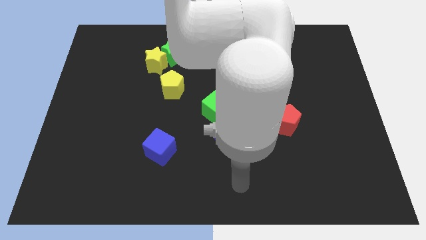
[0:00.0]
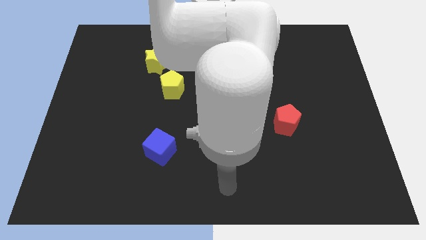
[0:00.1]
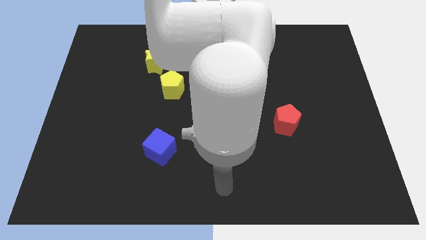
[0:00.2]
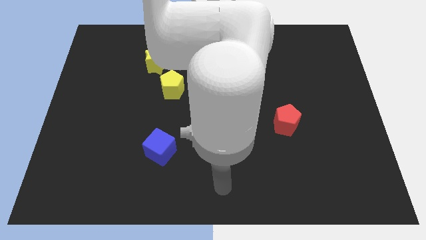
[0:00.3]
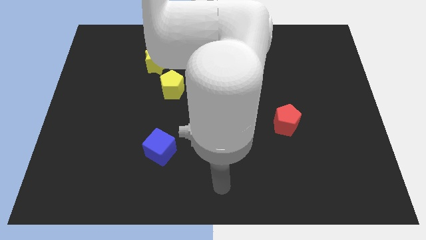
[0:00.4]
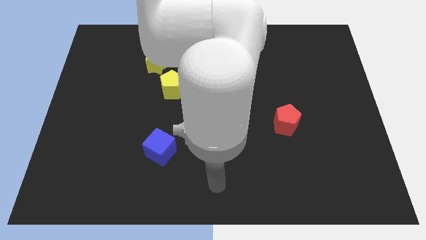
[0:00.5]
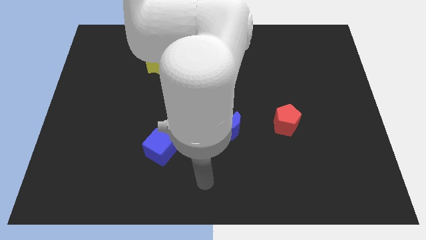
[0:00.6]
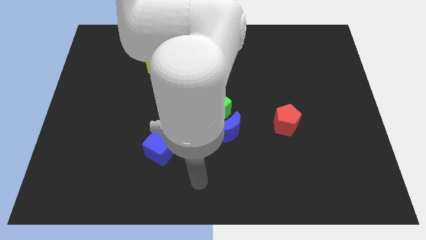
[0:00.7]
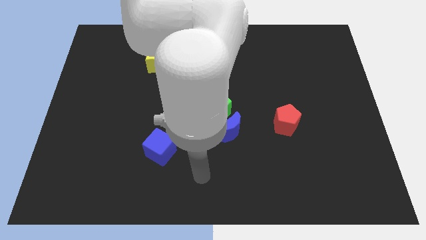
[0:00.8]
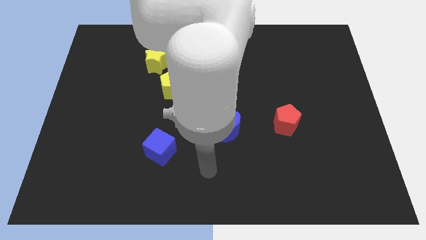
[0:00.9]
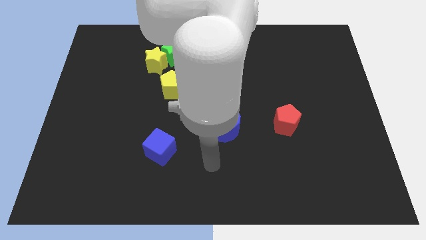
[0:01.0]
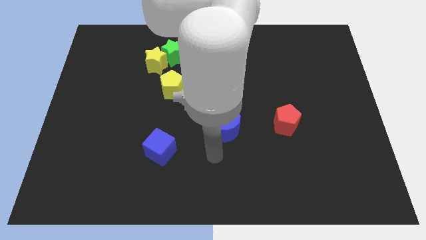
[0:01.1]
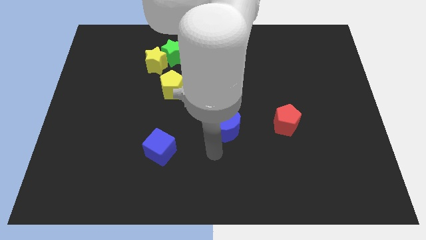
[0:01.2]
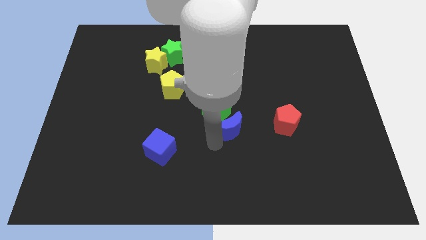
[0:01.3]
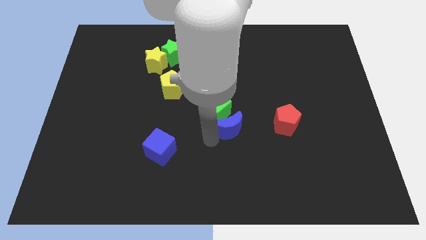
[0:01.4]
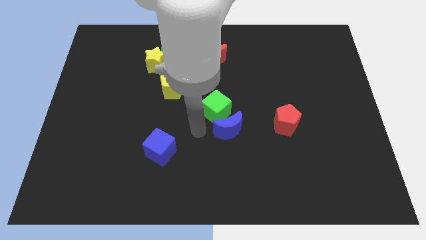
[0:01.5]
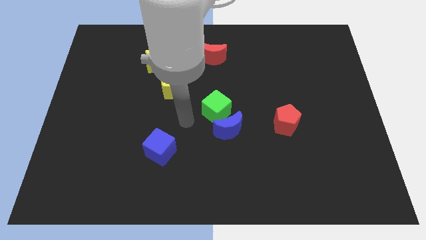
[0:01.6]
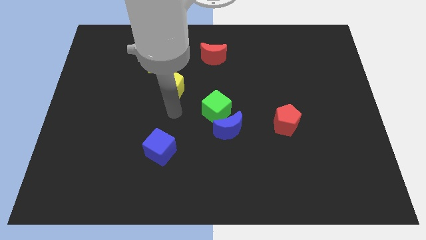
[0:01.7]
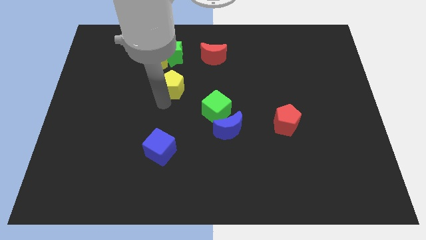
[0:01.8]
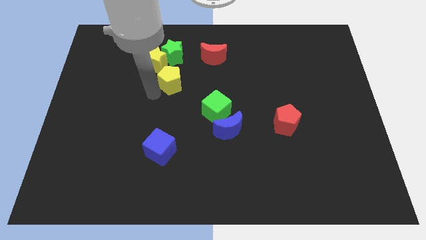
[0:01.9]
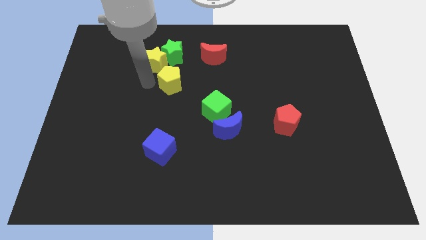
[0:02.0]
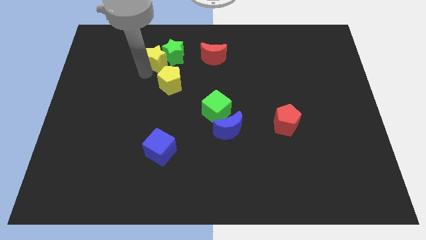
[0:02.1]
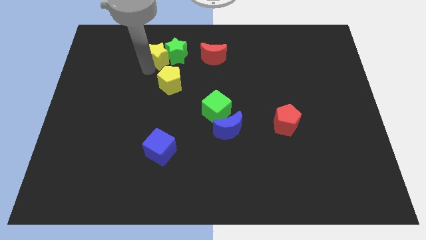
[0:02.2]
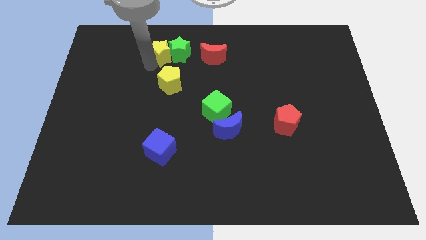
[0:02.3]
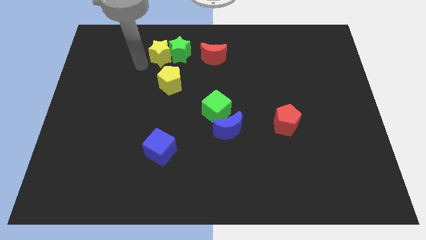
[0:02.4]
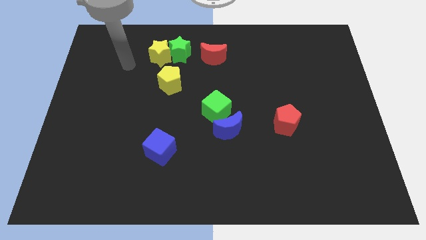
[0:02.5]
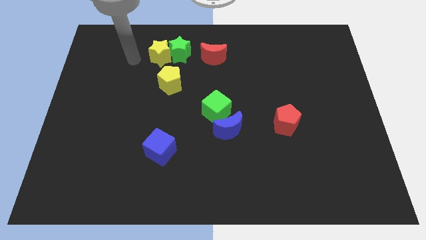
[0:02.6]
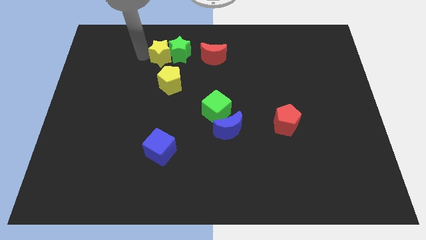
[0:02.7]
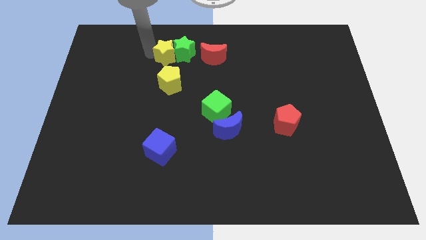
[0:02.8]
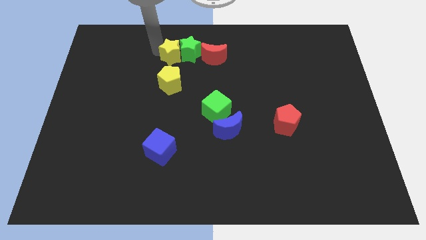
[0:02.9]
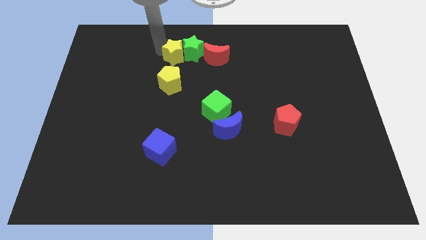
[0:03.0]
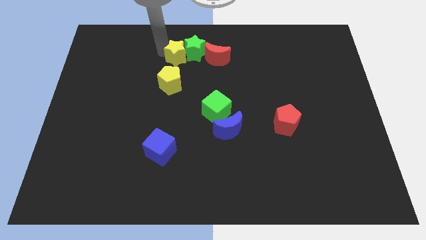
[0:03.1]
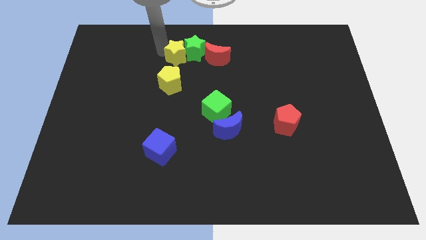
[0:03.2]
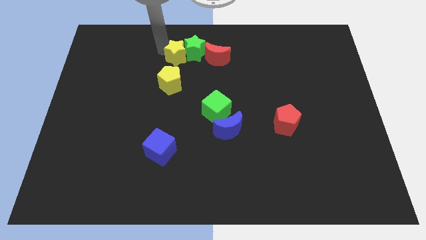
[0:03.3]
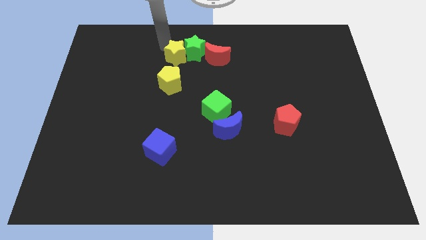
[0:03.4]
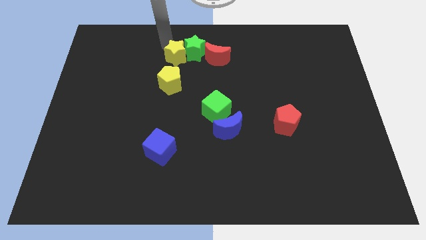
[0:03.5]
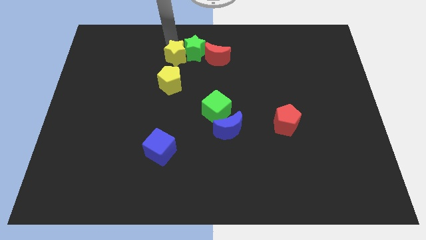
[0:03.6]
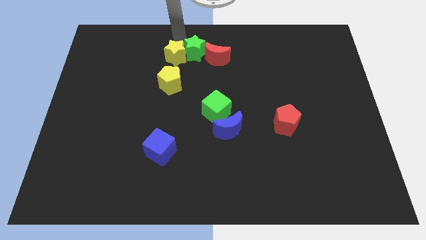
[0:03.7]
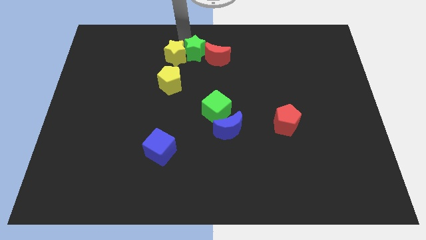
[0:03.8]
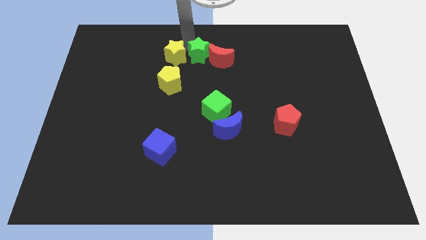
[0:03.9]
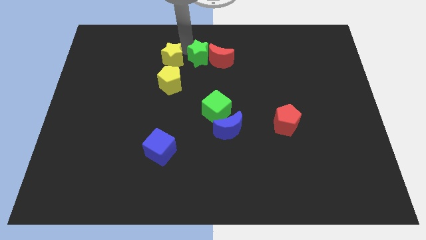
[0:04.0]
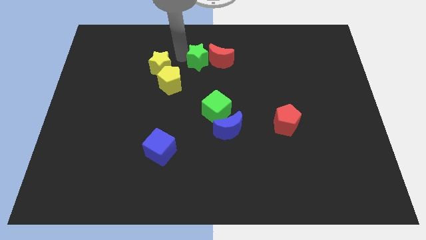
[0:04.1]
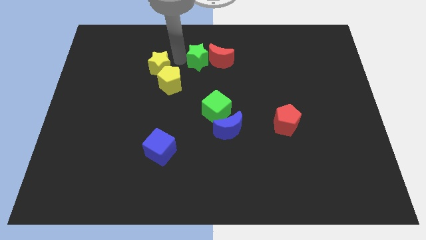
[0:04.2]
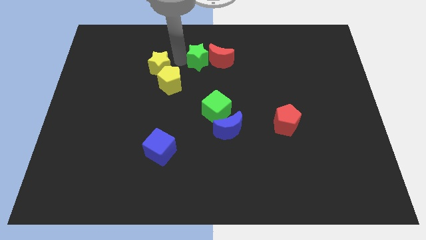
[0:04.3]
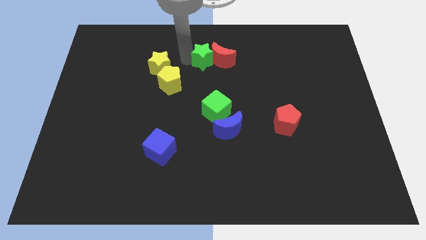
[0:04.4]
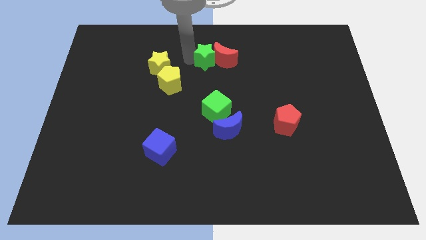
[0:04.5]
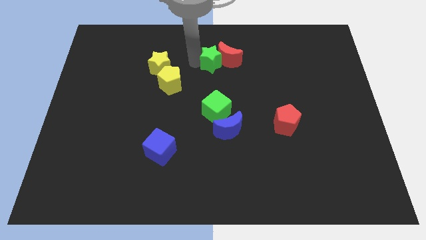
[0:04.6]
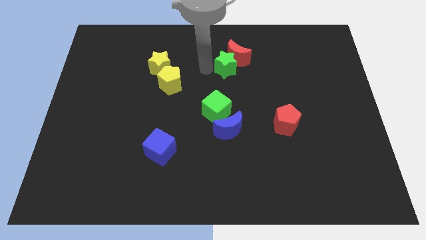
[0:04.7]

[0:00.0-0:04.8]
move away the green star from the yellow star

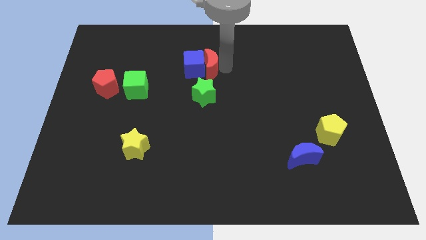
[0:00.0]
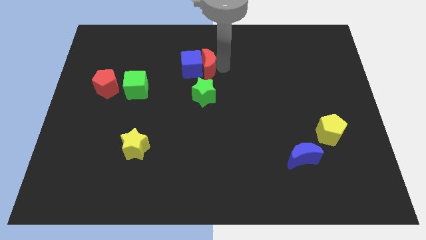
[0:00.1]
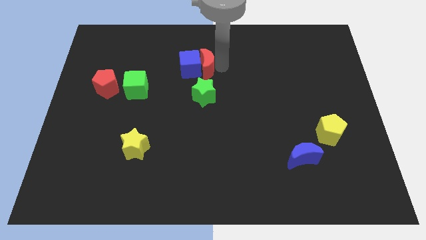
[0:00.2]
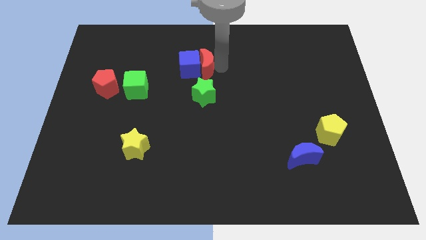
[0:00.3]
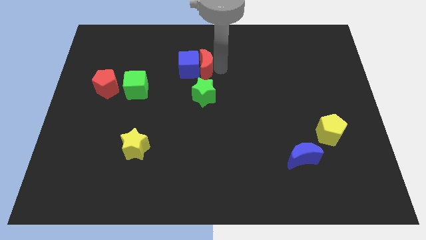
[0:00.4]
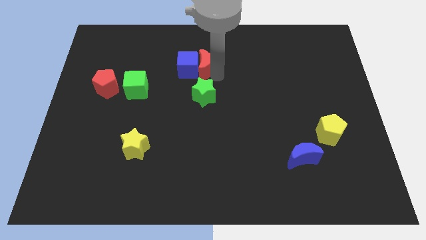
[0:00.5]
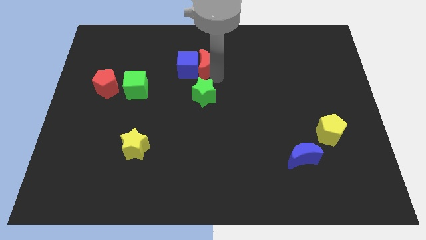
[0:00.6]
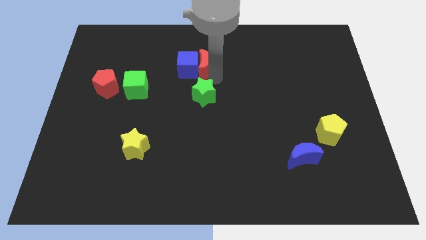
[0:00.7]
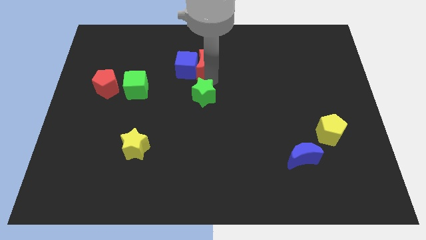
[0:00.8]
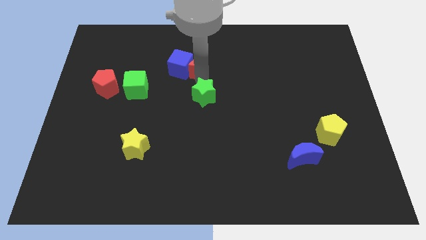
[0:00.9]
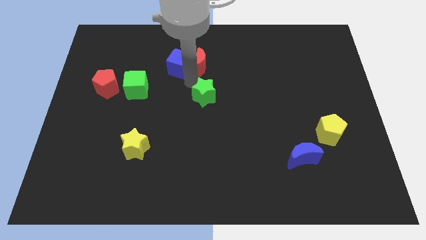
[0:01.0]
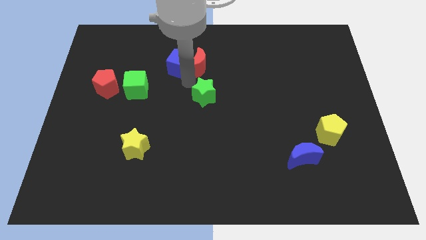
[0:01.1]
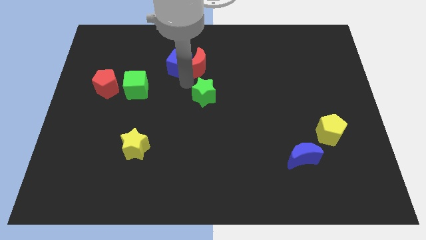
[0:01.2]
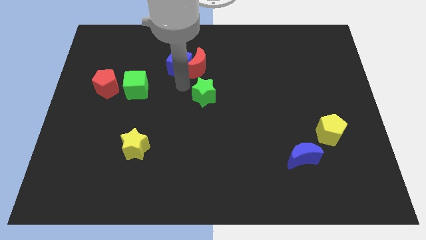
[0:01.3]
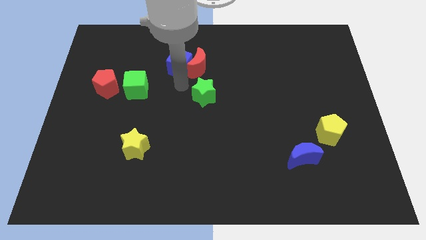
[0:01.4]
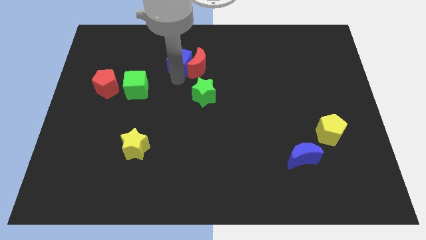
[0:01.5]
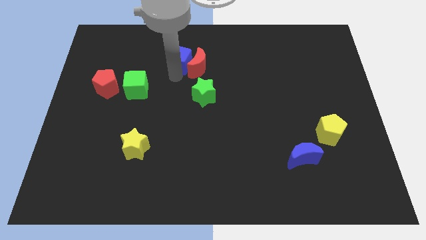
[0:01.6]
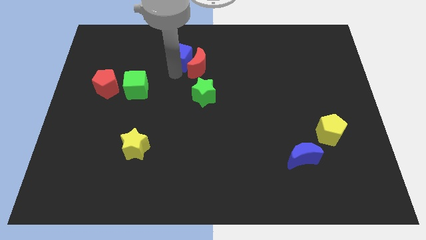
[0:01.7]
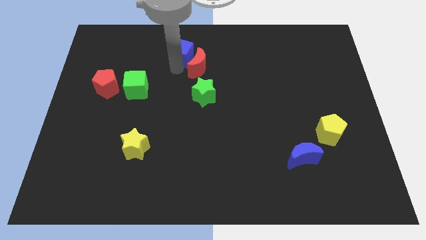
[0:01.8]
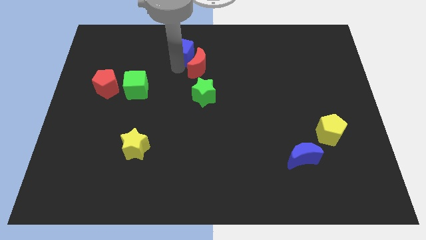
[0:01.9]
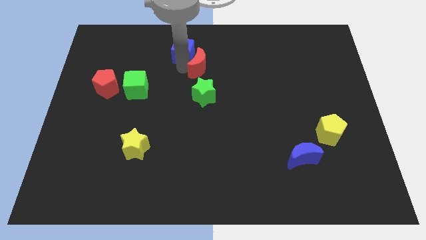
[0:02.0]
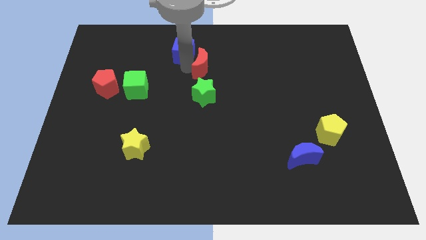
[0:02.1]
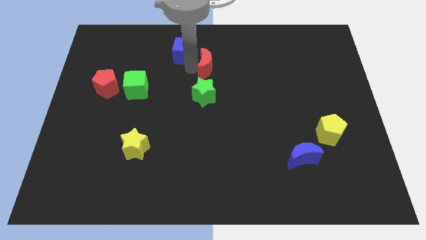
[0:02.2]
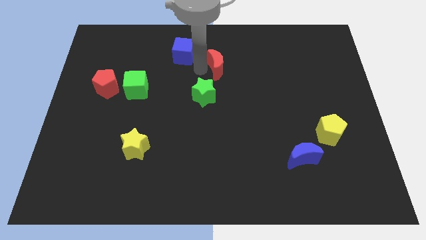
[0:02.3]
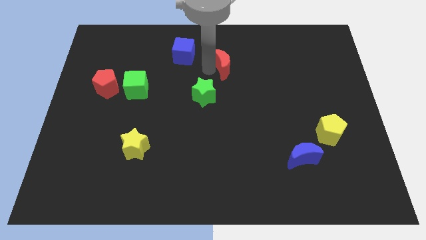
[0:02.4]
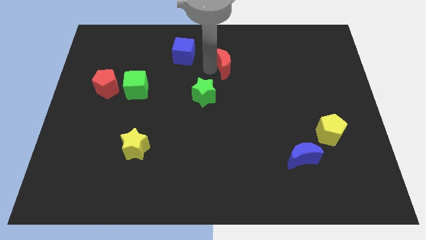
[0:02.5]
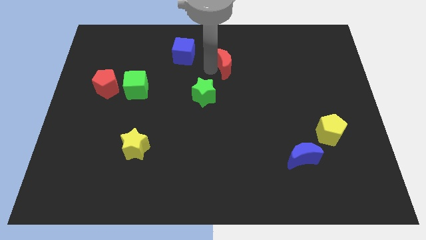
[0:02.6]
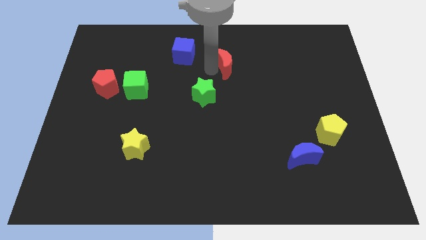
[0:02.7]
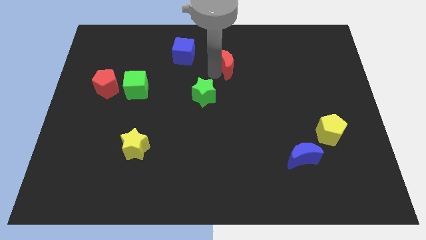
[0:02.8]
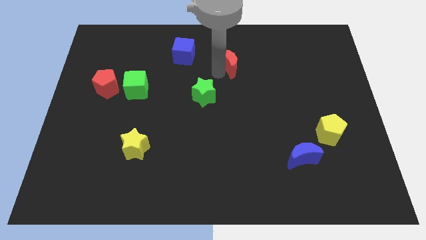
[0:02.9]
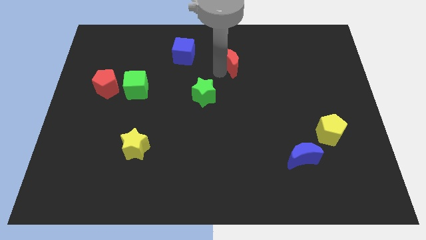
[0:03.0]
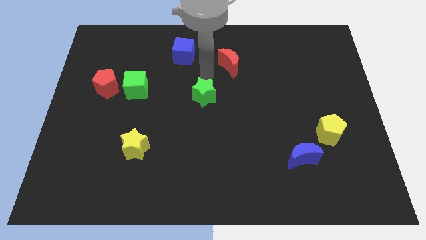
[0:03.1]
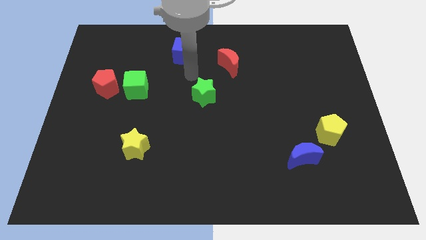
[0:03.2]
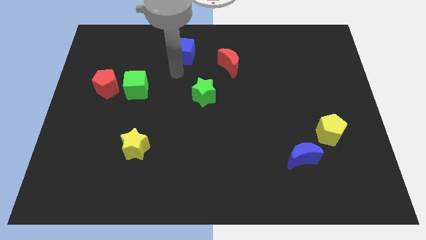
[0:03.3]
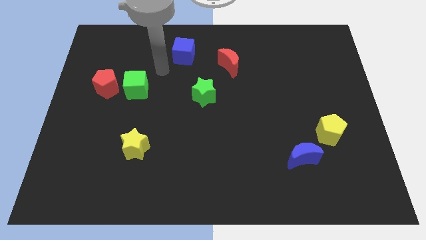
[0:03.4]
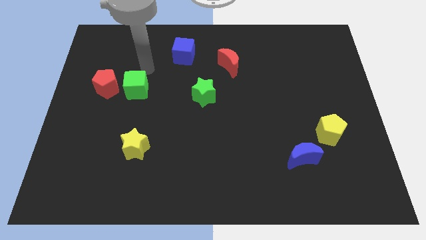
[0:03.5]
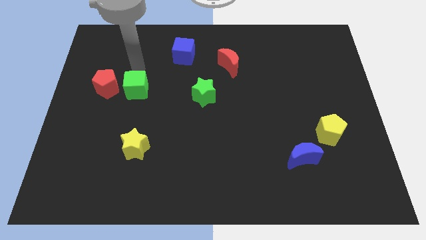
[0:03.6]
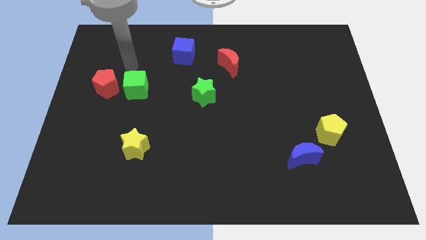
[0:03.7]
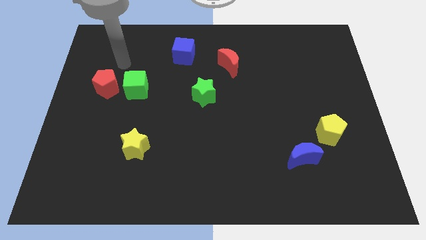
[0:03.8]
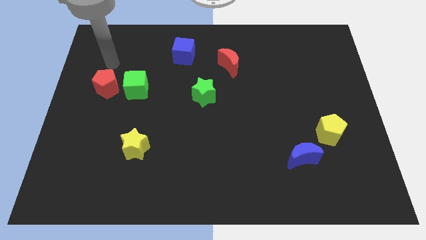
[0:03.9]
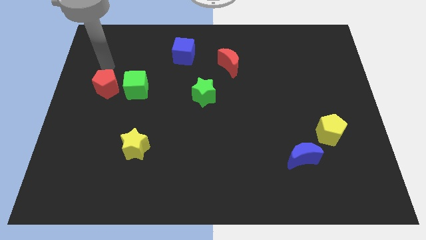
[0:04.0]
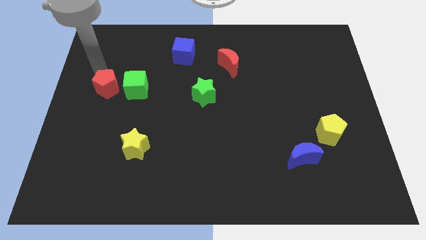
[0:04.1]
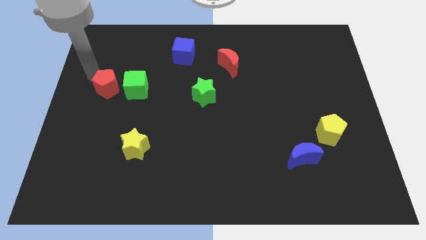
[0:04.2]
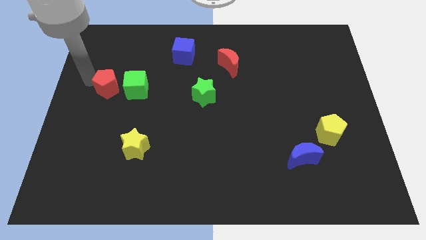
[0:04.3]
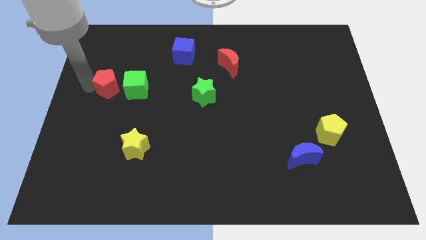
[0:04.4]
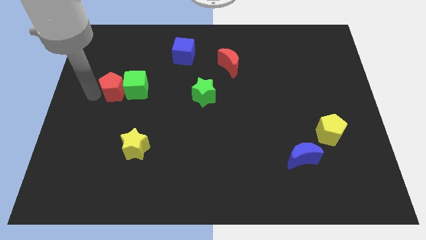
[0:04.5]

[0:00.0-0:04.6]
separate the red moon and blue cube
